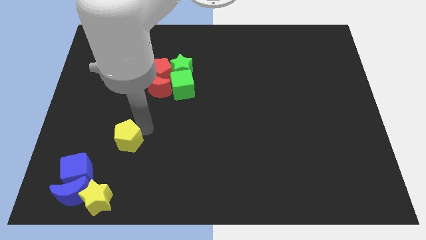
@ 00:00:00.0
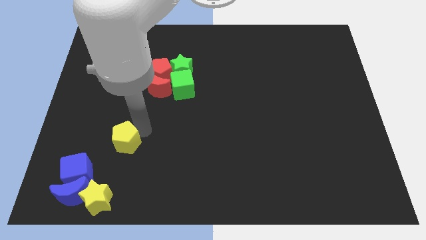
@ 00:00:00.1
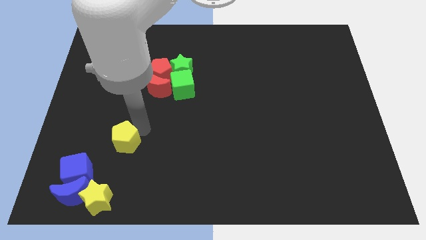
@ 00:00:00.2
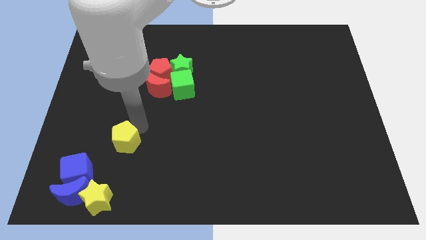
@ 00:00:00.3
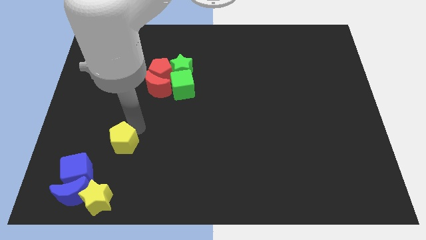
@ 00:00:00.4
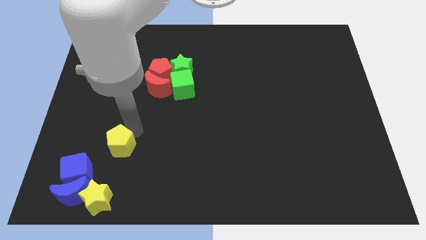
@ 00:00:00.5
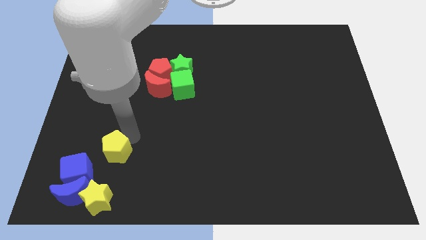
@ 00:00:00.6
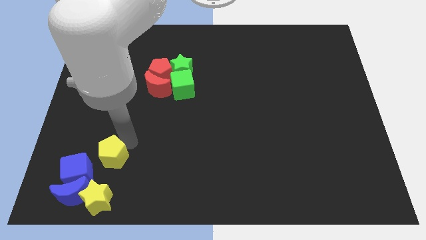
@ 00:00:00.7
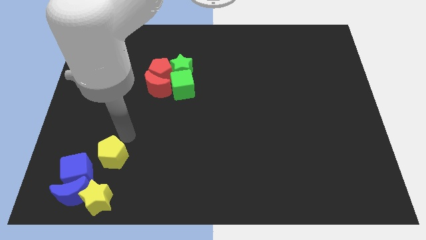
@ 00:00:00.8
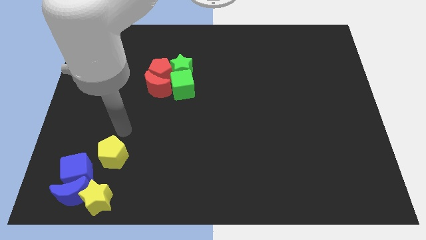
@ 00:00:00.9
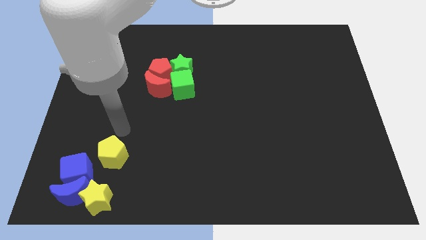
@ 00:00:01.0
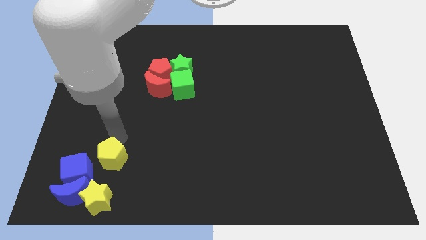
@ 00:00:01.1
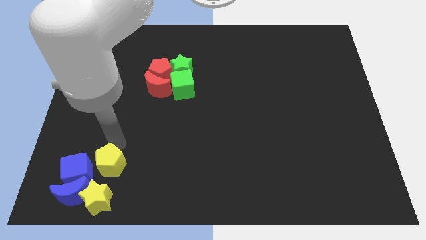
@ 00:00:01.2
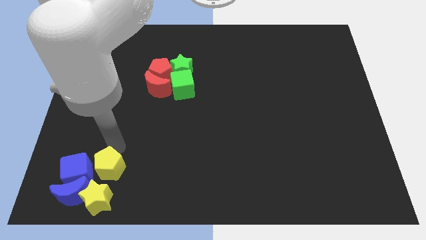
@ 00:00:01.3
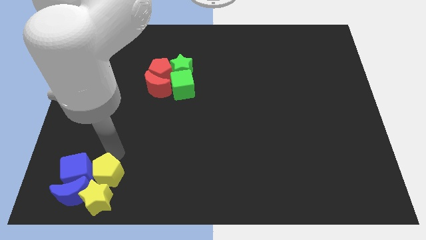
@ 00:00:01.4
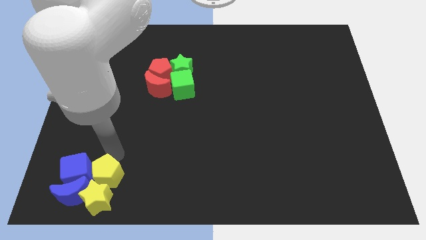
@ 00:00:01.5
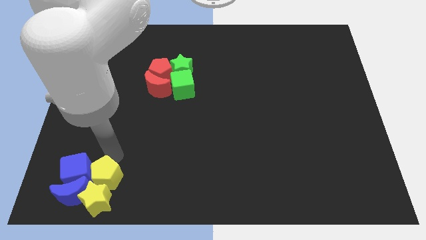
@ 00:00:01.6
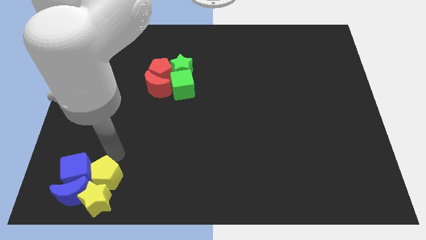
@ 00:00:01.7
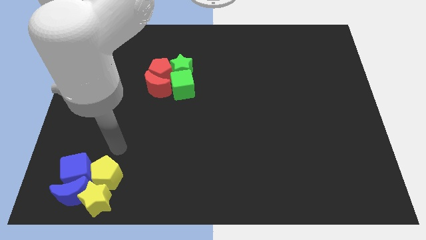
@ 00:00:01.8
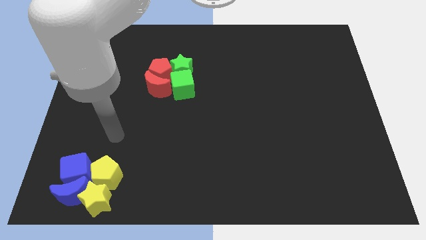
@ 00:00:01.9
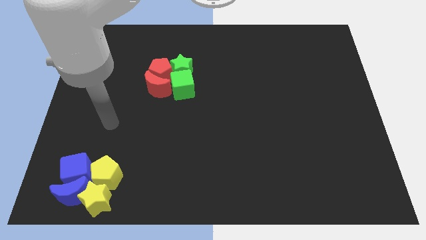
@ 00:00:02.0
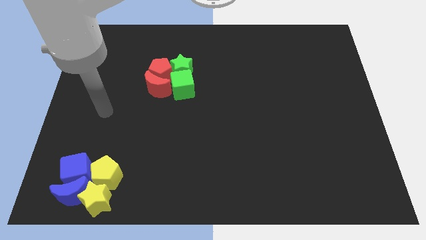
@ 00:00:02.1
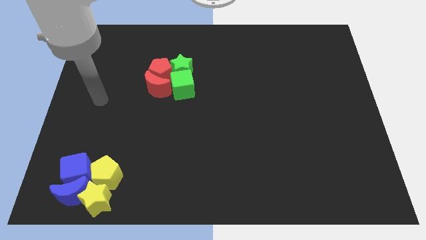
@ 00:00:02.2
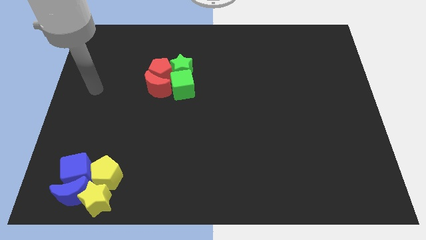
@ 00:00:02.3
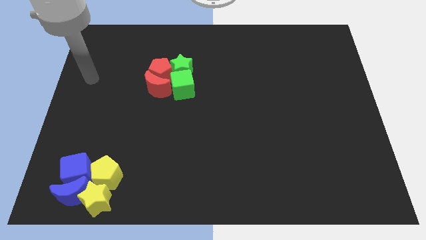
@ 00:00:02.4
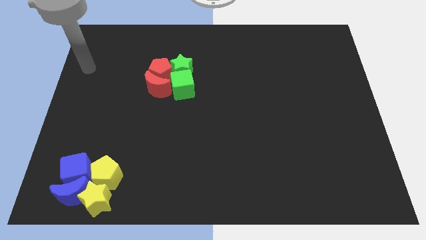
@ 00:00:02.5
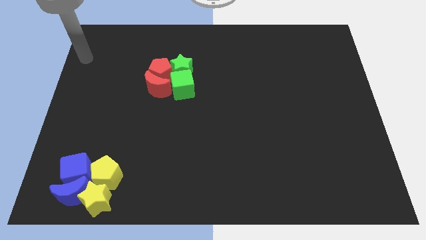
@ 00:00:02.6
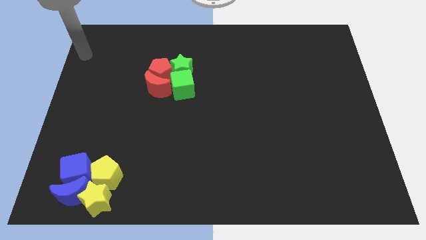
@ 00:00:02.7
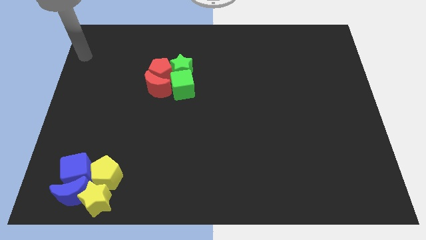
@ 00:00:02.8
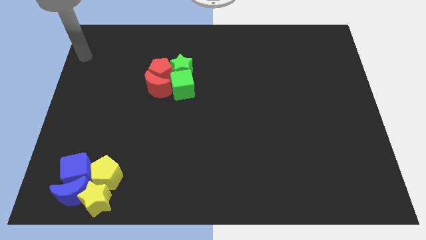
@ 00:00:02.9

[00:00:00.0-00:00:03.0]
make a group of yellow and blue blocks

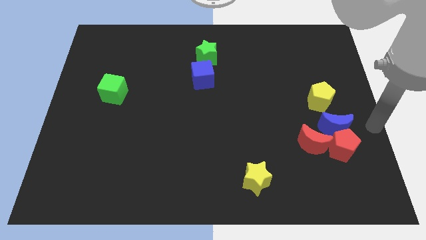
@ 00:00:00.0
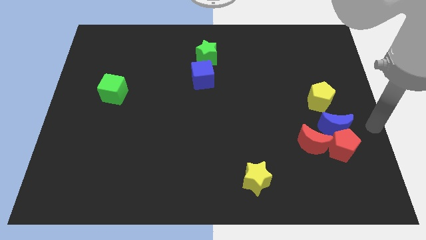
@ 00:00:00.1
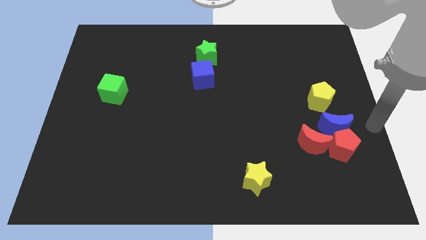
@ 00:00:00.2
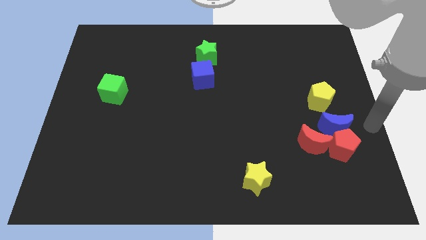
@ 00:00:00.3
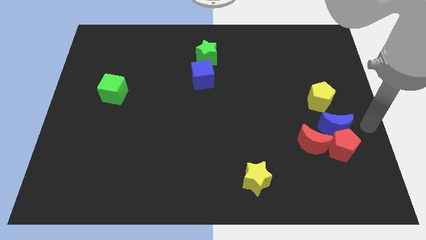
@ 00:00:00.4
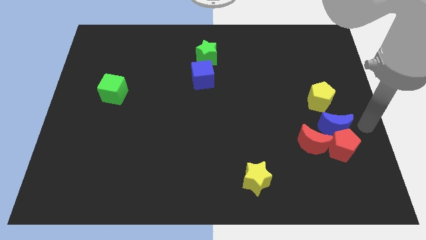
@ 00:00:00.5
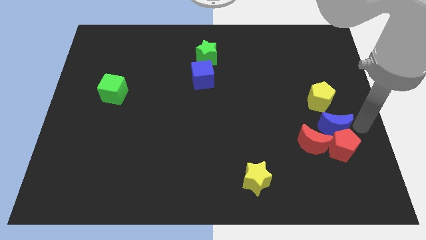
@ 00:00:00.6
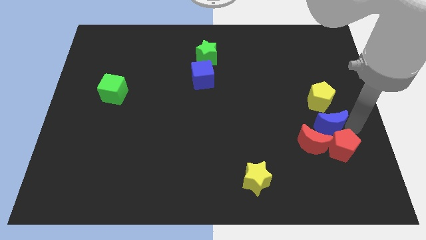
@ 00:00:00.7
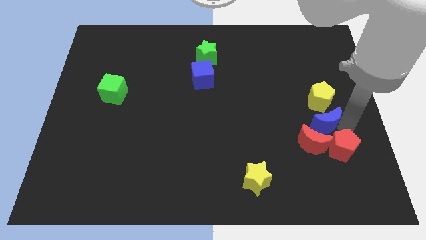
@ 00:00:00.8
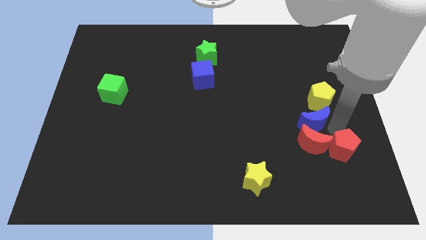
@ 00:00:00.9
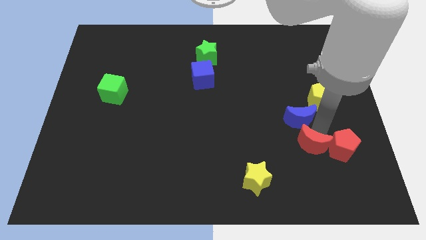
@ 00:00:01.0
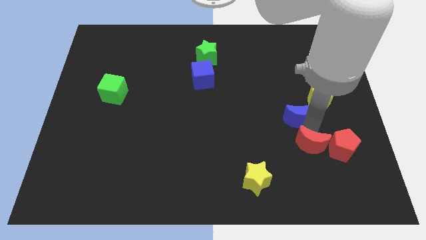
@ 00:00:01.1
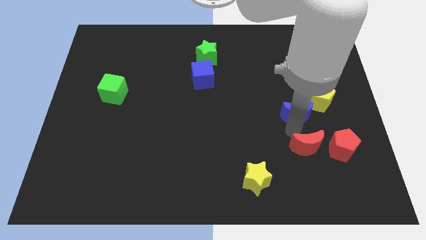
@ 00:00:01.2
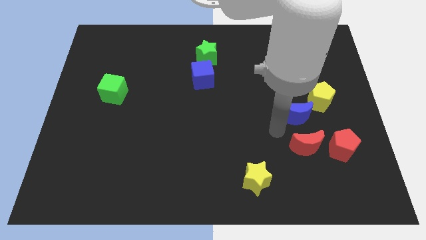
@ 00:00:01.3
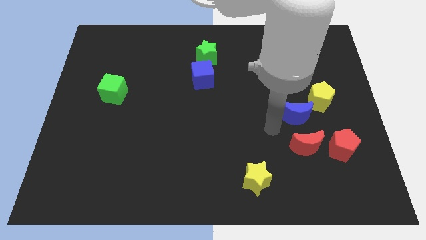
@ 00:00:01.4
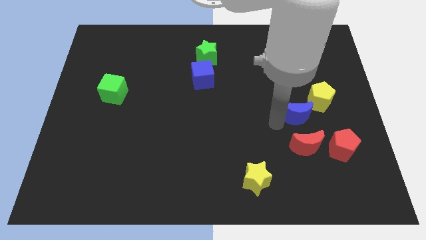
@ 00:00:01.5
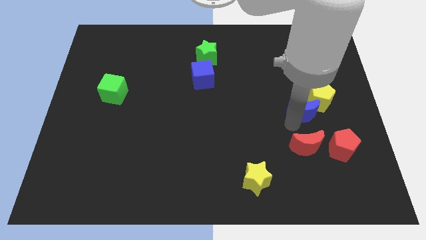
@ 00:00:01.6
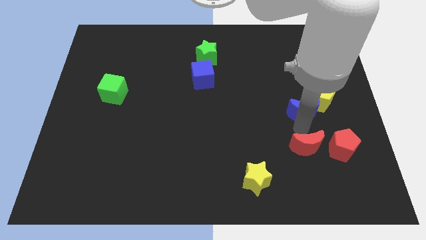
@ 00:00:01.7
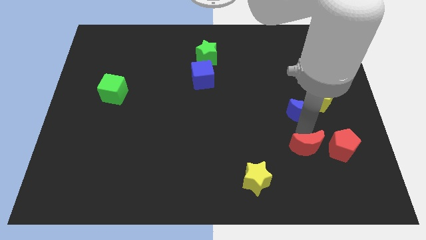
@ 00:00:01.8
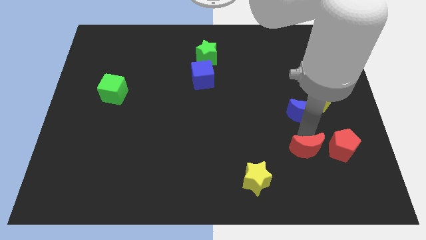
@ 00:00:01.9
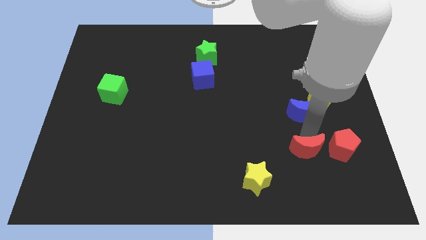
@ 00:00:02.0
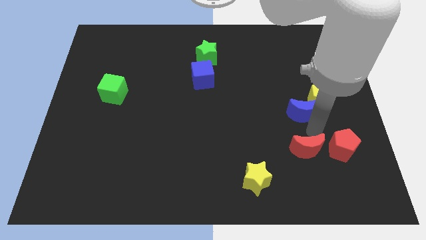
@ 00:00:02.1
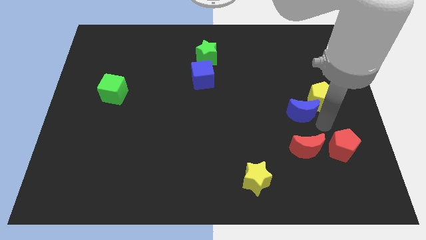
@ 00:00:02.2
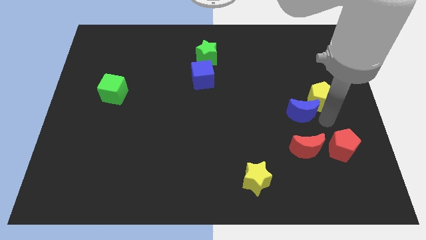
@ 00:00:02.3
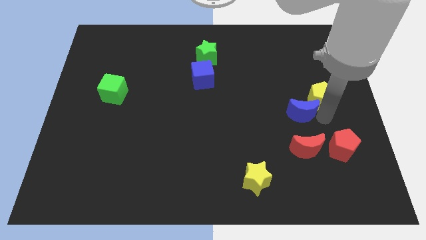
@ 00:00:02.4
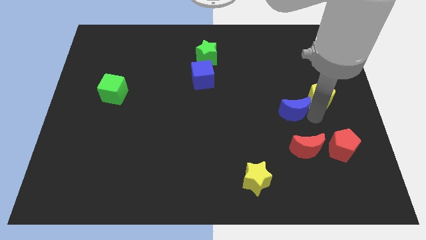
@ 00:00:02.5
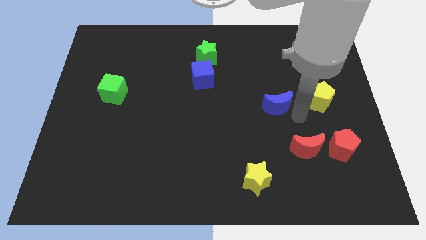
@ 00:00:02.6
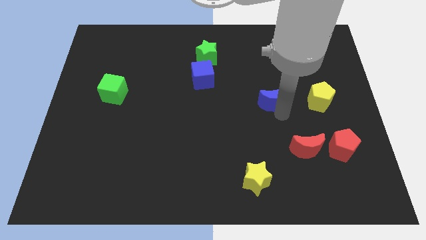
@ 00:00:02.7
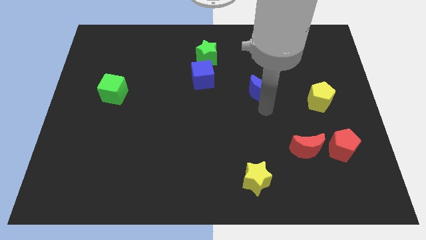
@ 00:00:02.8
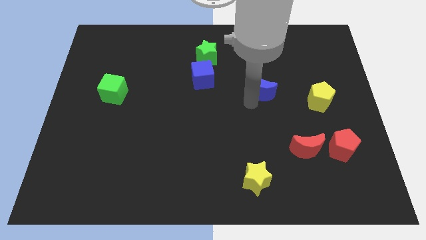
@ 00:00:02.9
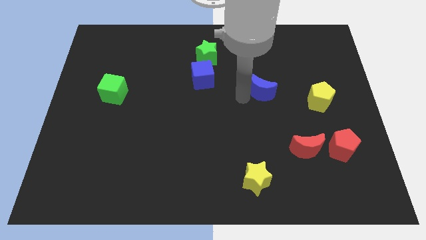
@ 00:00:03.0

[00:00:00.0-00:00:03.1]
move the blue moon to the left side of the yellow pentagon

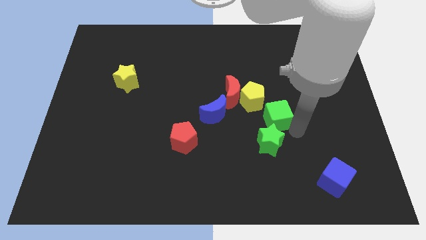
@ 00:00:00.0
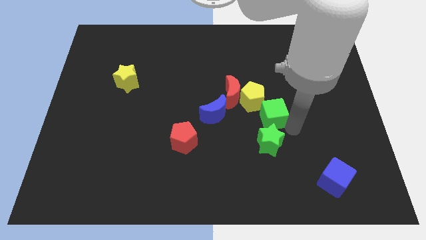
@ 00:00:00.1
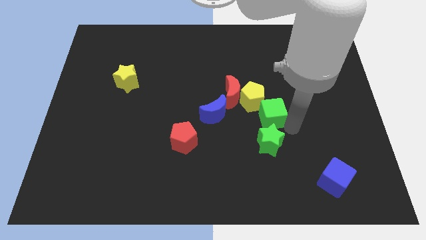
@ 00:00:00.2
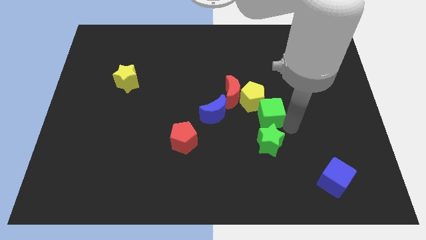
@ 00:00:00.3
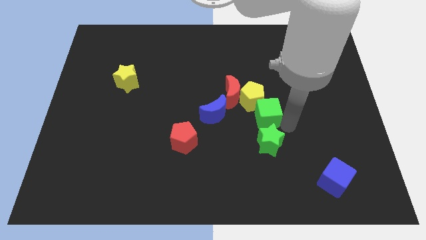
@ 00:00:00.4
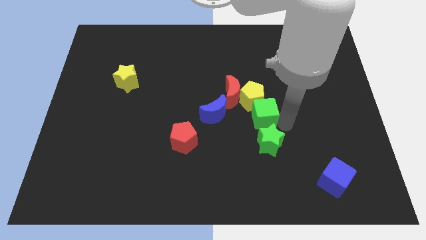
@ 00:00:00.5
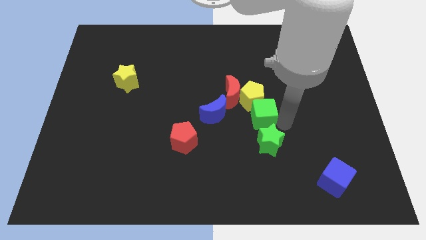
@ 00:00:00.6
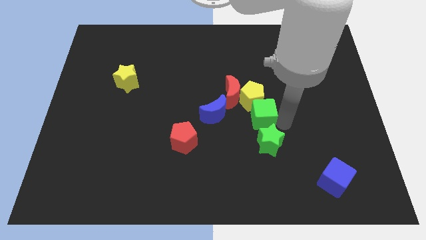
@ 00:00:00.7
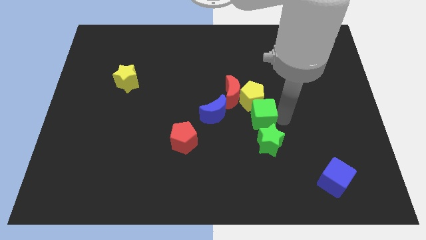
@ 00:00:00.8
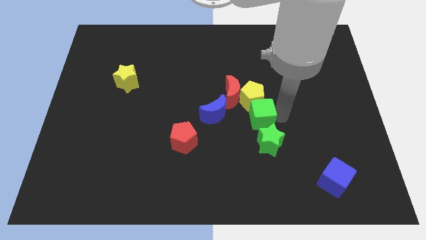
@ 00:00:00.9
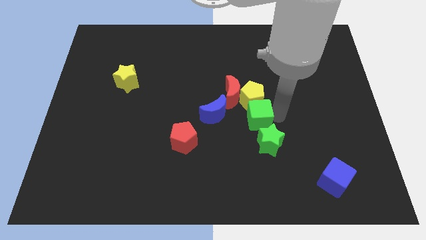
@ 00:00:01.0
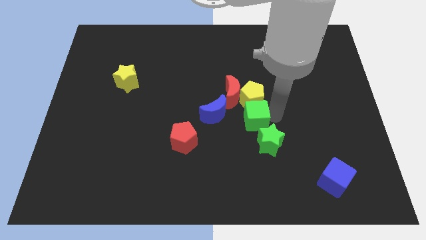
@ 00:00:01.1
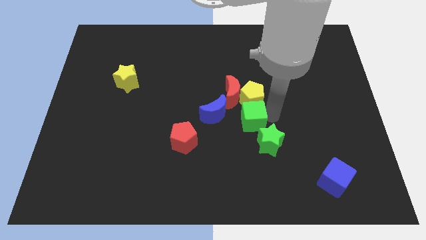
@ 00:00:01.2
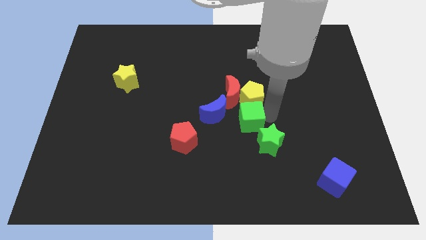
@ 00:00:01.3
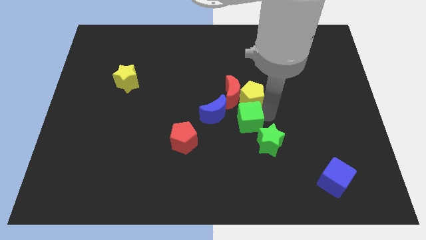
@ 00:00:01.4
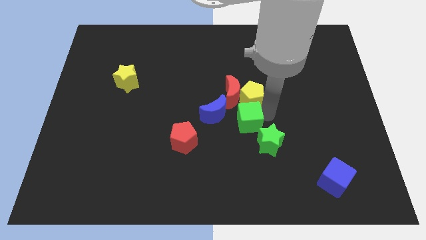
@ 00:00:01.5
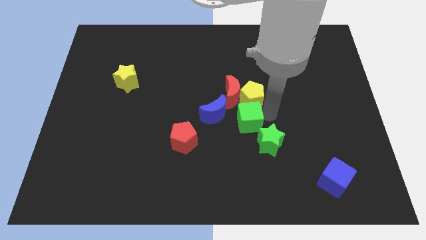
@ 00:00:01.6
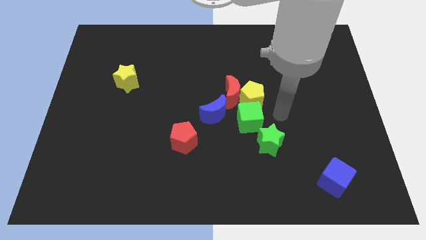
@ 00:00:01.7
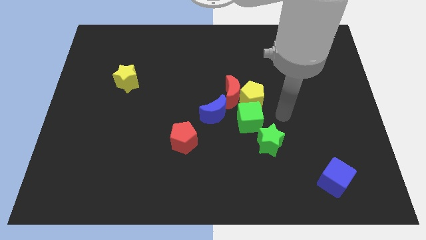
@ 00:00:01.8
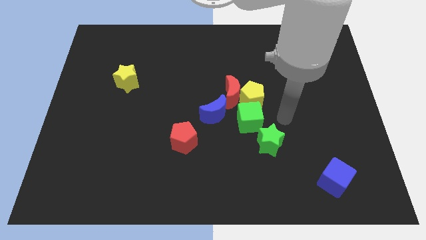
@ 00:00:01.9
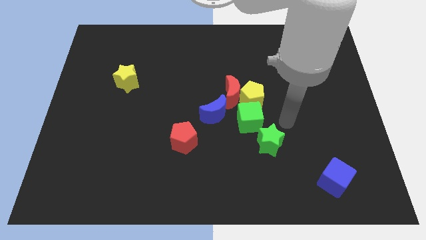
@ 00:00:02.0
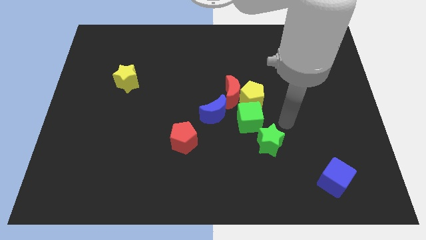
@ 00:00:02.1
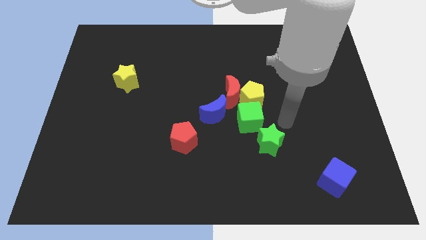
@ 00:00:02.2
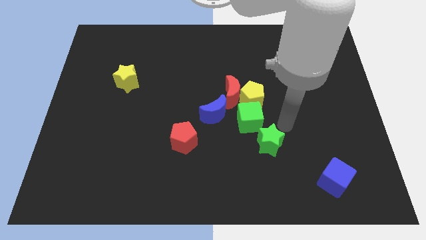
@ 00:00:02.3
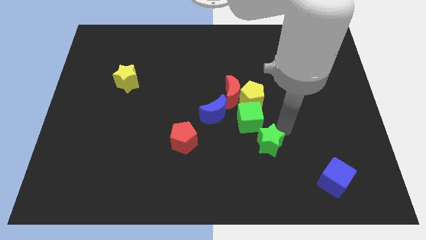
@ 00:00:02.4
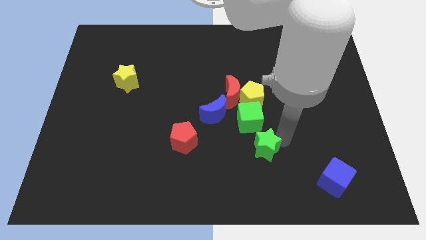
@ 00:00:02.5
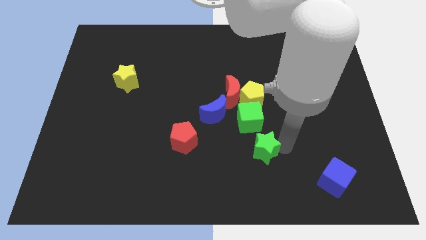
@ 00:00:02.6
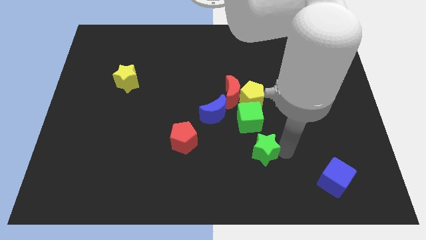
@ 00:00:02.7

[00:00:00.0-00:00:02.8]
move the green cube to the bottom of the yellow pentagon
